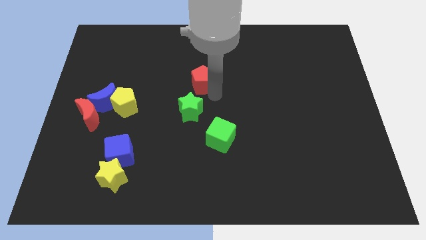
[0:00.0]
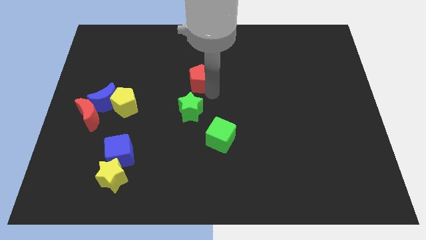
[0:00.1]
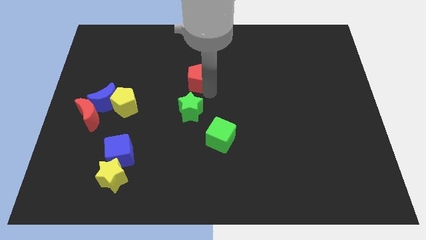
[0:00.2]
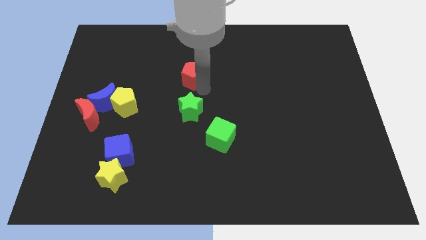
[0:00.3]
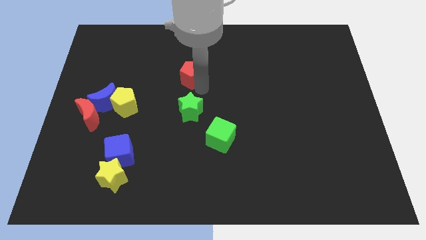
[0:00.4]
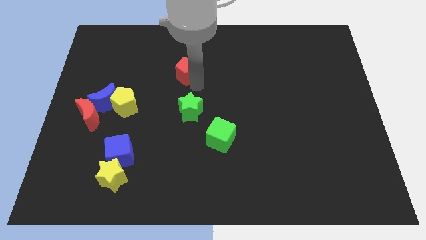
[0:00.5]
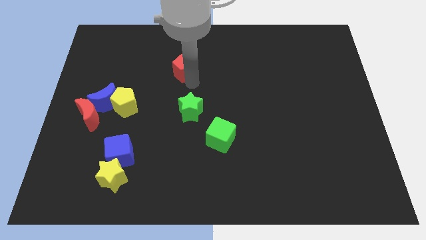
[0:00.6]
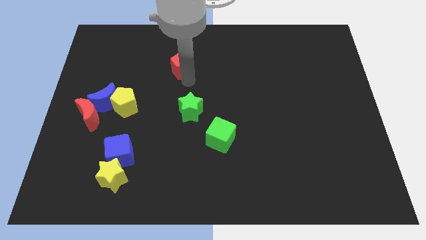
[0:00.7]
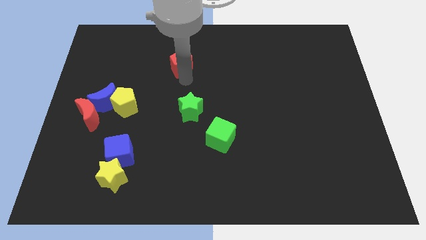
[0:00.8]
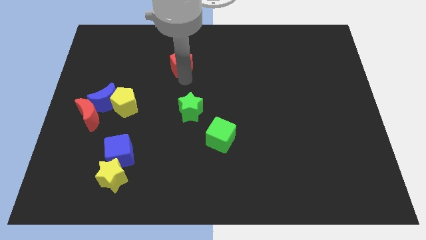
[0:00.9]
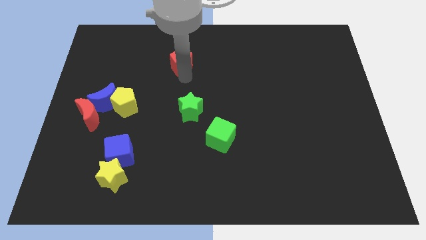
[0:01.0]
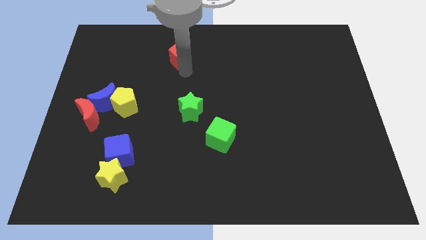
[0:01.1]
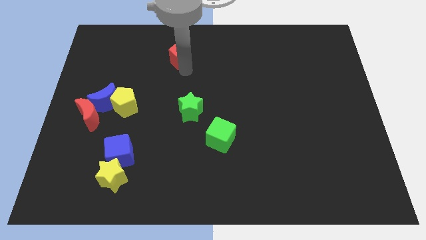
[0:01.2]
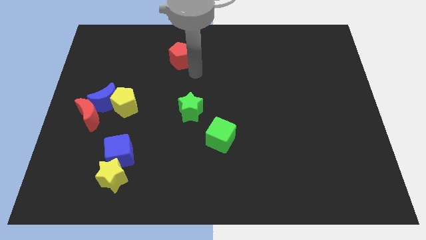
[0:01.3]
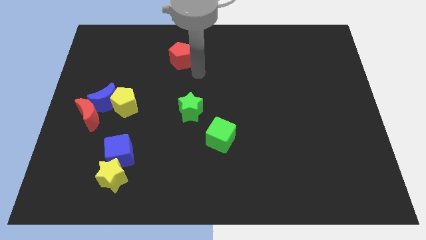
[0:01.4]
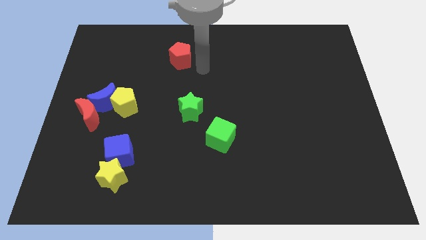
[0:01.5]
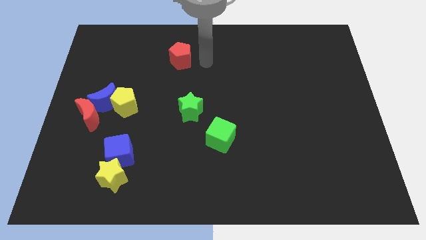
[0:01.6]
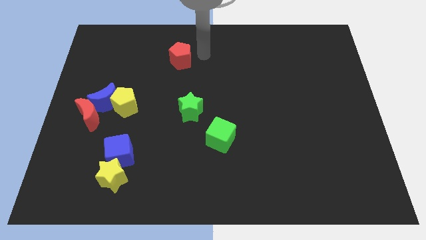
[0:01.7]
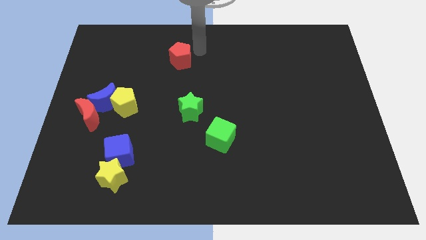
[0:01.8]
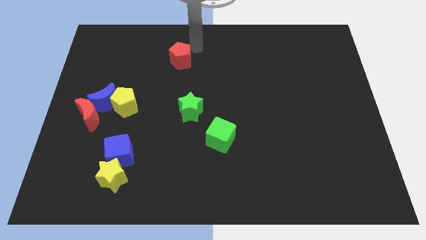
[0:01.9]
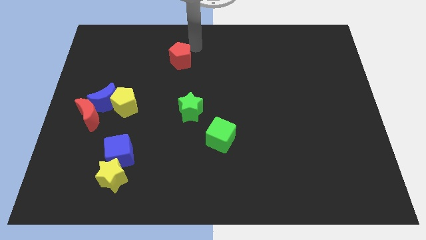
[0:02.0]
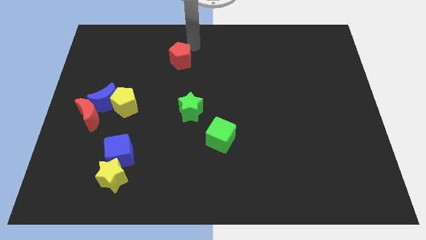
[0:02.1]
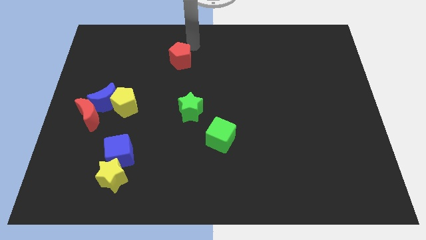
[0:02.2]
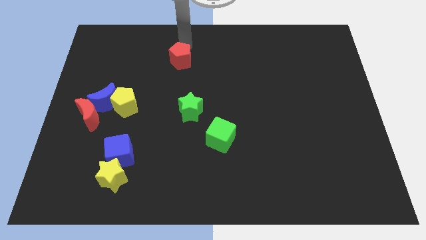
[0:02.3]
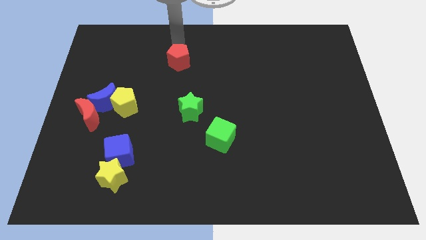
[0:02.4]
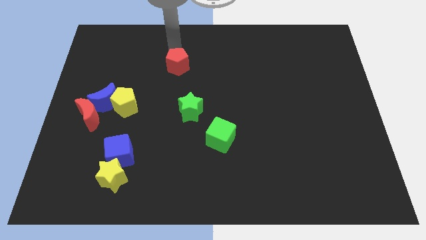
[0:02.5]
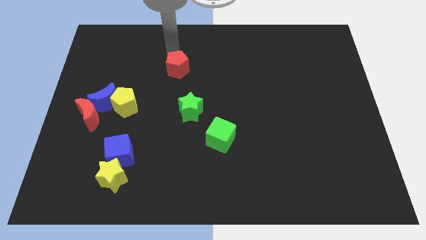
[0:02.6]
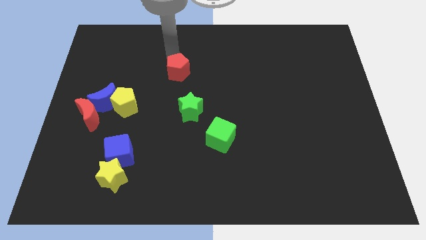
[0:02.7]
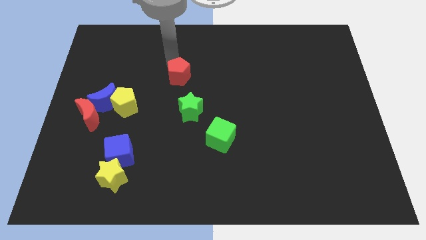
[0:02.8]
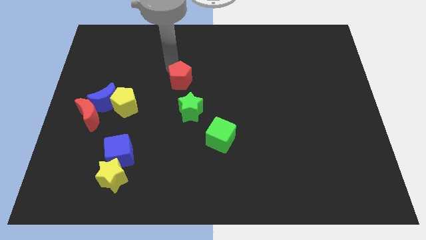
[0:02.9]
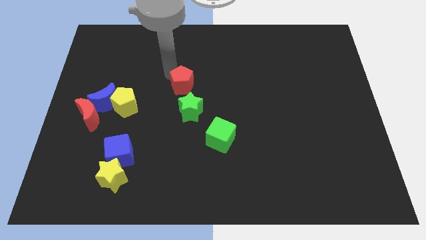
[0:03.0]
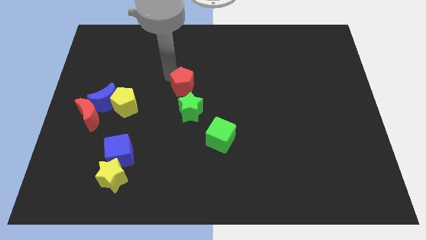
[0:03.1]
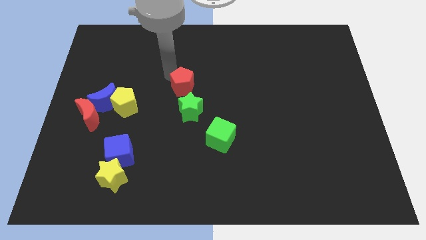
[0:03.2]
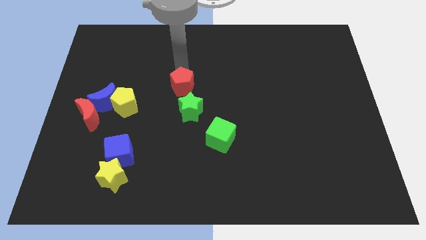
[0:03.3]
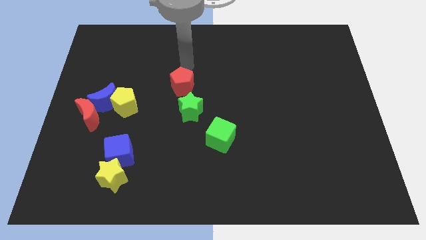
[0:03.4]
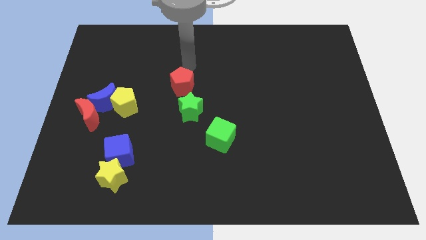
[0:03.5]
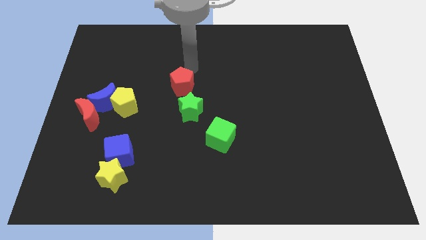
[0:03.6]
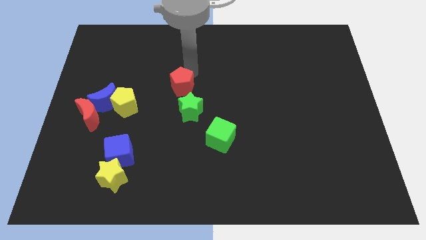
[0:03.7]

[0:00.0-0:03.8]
move the red pentagon above the green star

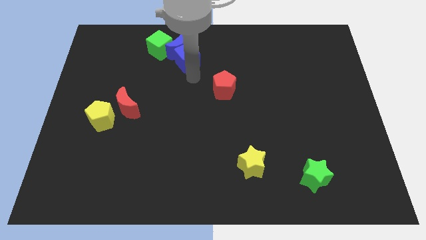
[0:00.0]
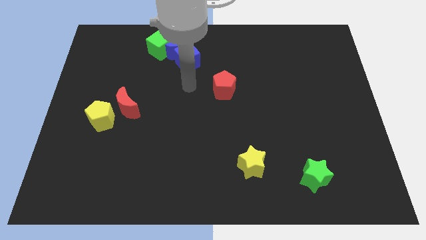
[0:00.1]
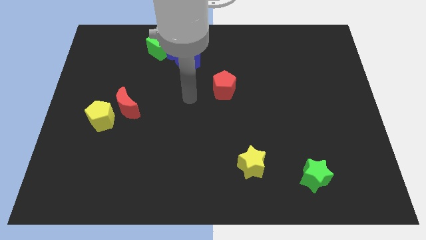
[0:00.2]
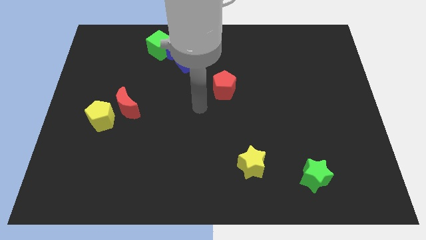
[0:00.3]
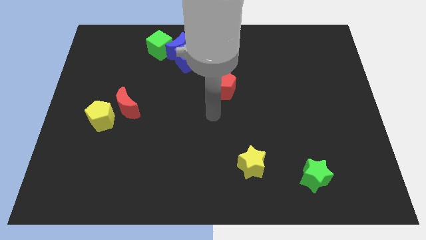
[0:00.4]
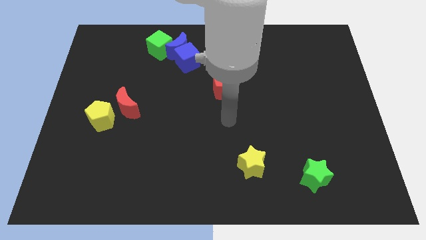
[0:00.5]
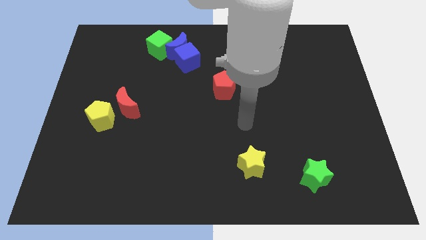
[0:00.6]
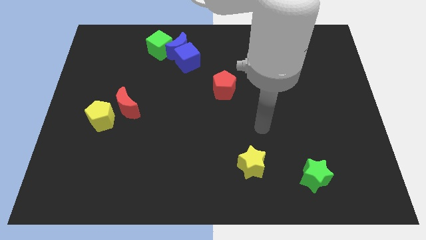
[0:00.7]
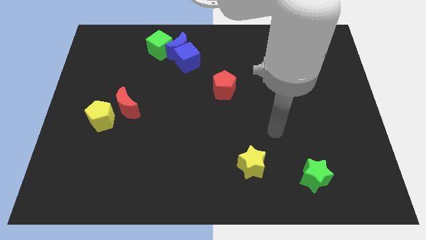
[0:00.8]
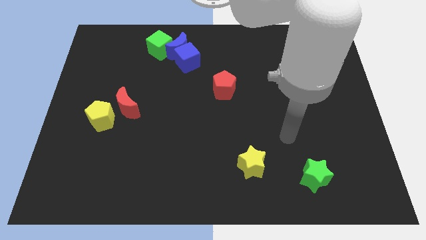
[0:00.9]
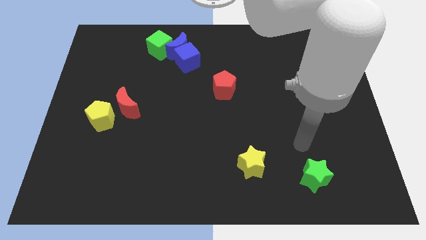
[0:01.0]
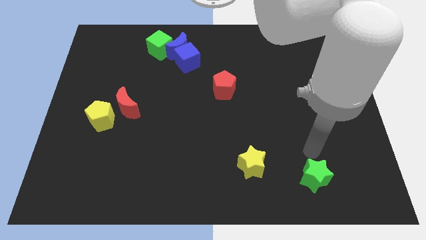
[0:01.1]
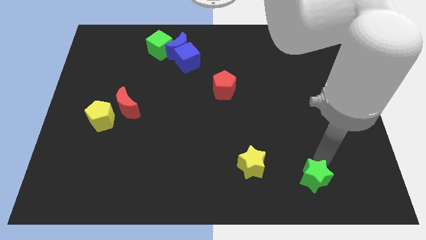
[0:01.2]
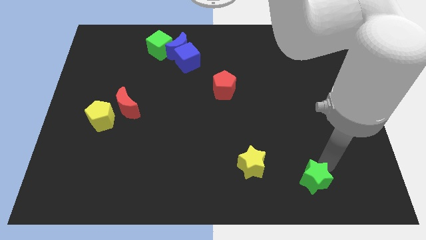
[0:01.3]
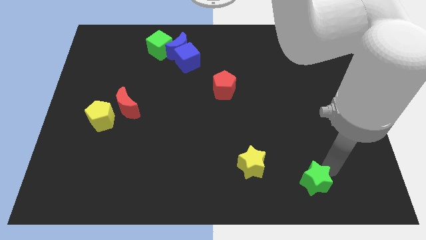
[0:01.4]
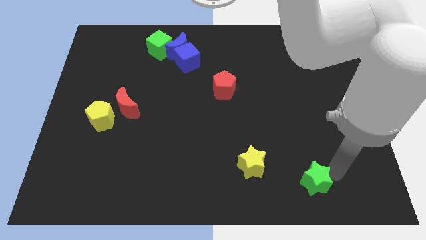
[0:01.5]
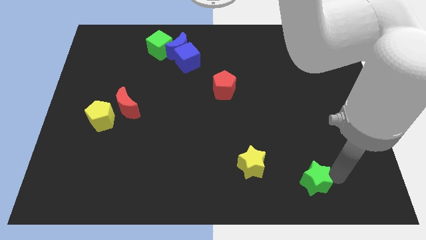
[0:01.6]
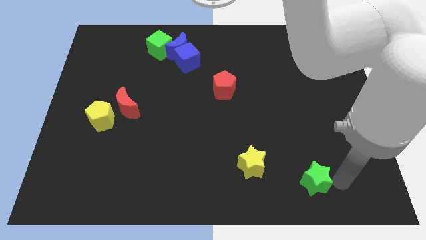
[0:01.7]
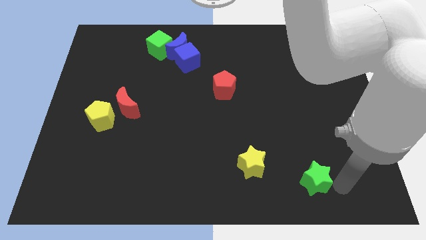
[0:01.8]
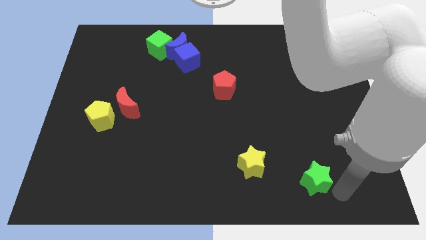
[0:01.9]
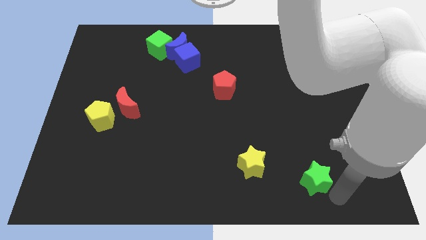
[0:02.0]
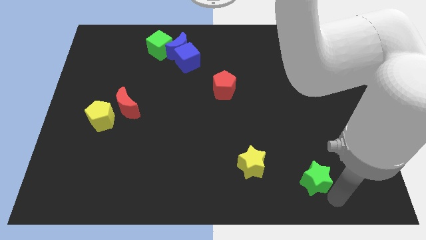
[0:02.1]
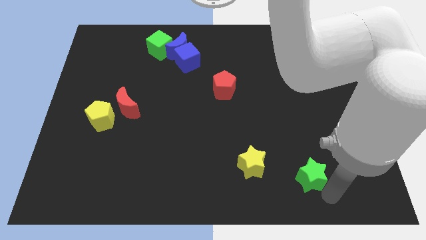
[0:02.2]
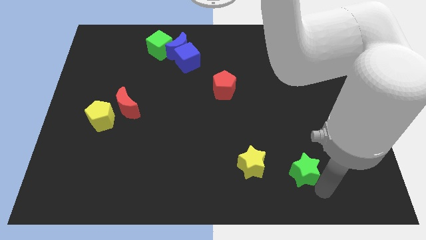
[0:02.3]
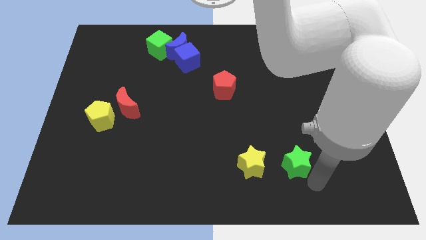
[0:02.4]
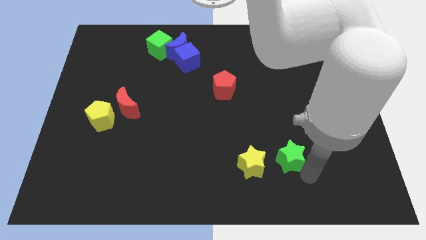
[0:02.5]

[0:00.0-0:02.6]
place the green star parallel to the right side of the yellow star

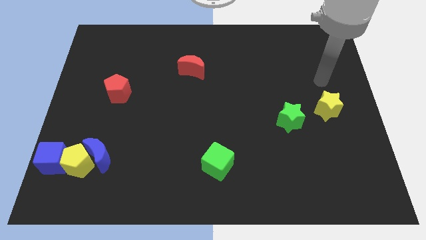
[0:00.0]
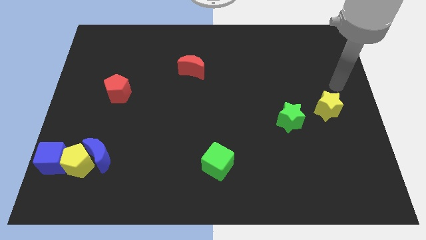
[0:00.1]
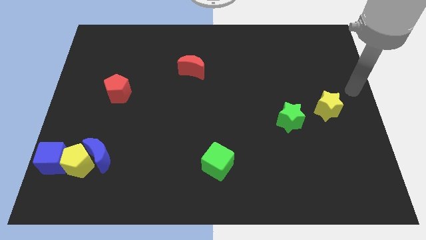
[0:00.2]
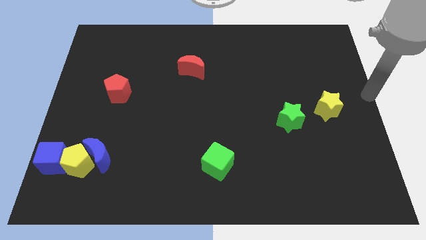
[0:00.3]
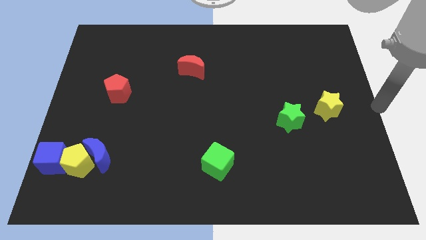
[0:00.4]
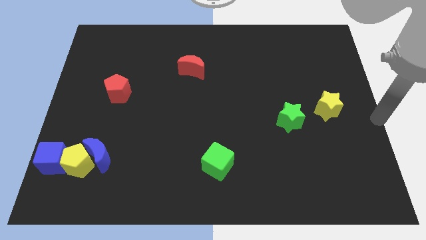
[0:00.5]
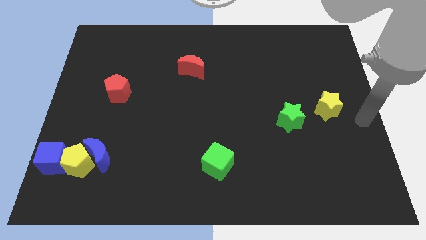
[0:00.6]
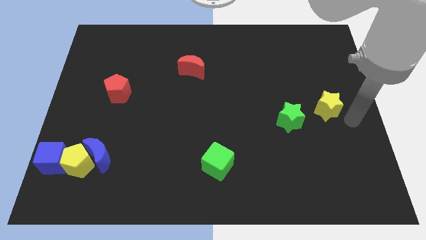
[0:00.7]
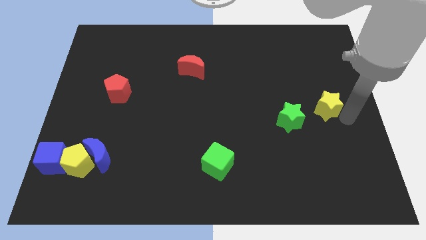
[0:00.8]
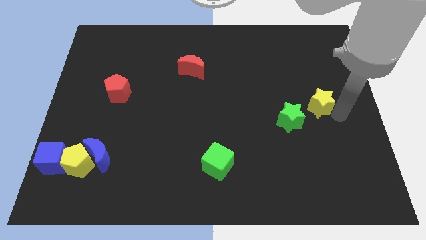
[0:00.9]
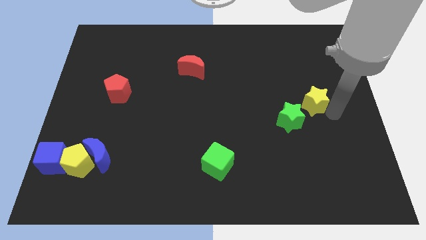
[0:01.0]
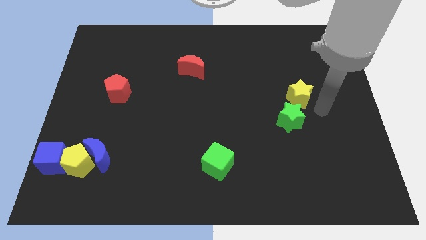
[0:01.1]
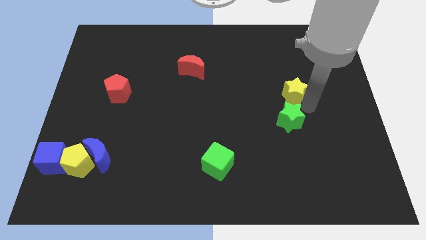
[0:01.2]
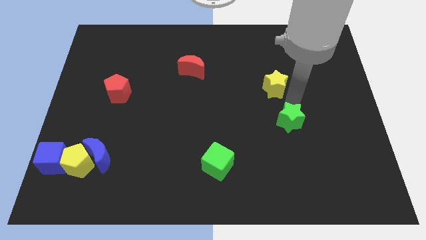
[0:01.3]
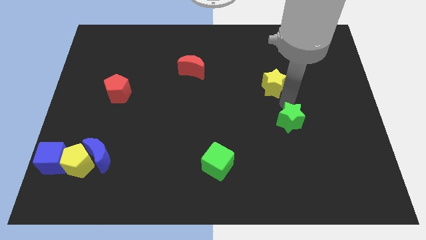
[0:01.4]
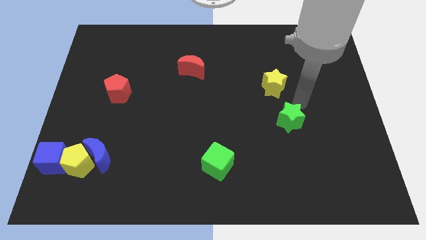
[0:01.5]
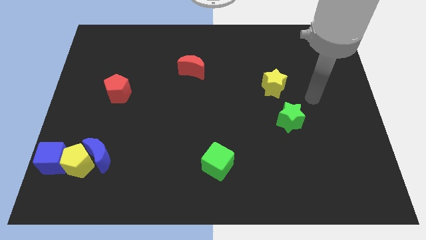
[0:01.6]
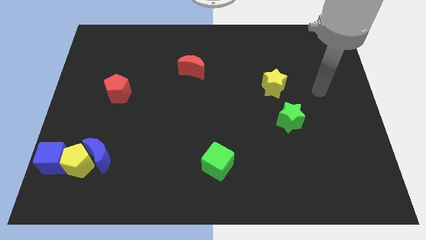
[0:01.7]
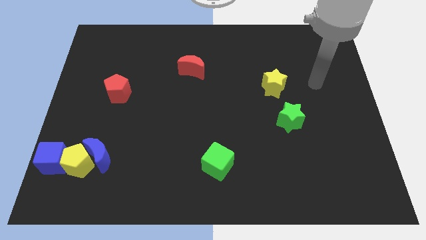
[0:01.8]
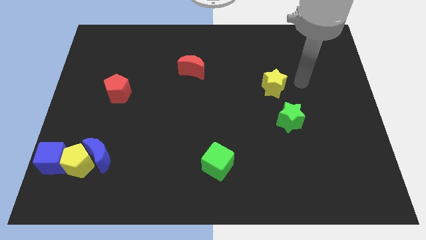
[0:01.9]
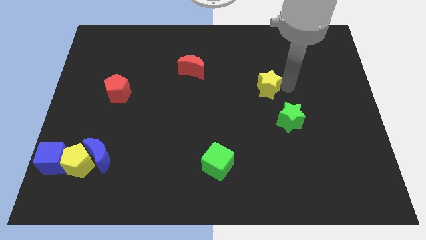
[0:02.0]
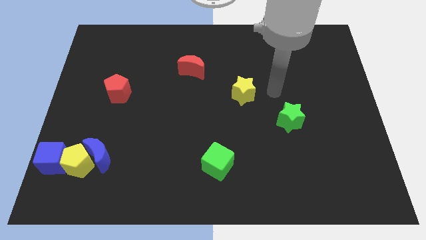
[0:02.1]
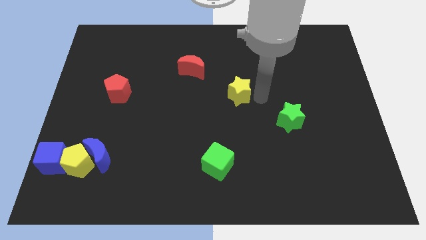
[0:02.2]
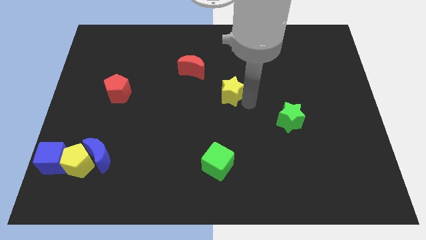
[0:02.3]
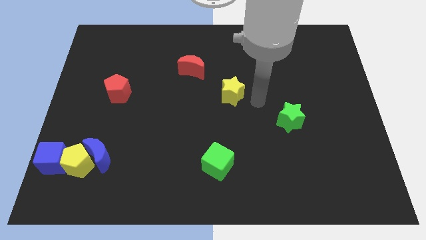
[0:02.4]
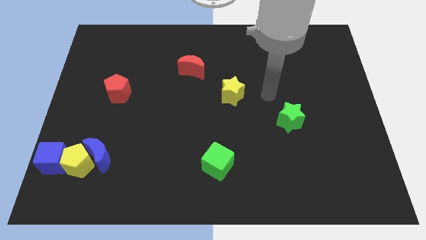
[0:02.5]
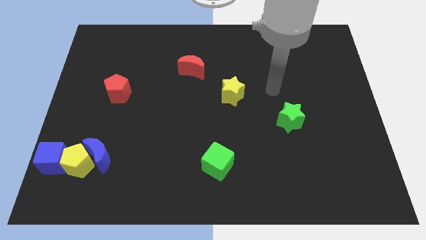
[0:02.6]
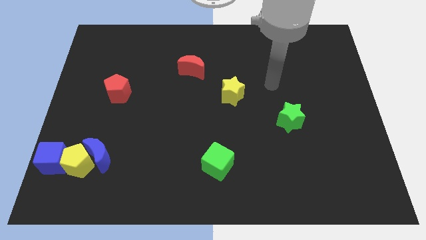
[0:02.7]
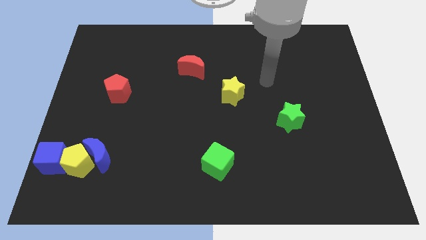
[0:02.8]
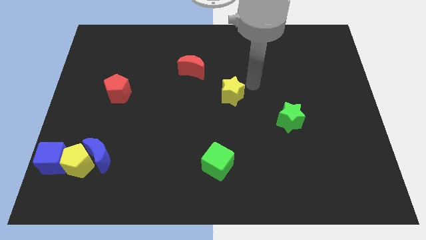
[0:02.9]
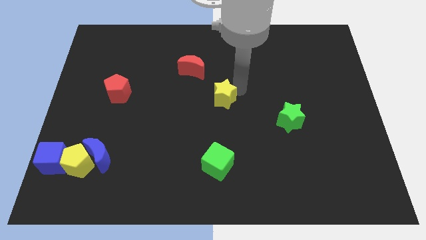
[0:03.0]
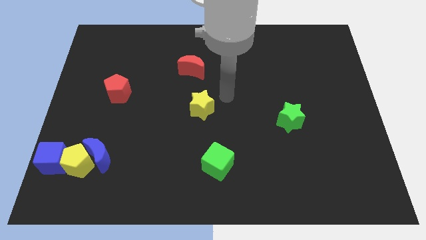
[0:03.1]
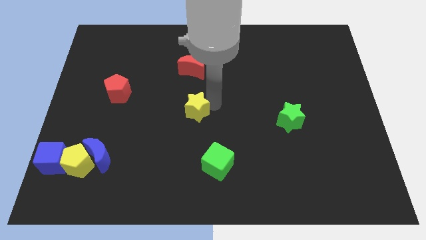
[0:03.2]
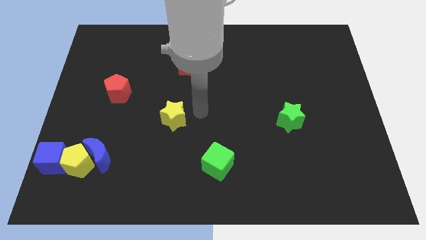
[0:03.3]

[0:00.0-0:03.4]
place yellow star vertical to red moon
